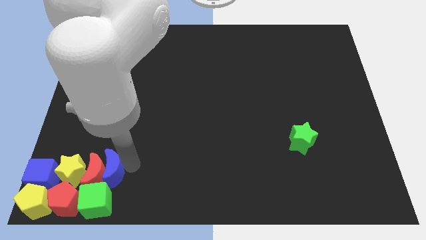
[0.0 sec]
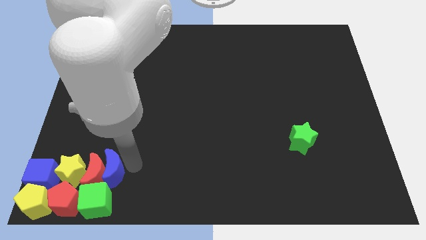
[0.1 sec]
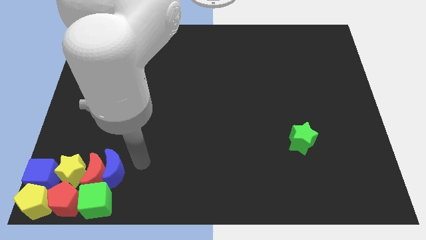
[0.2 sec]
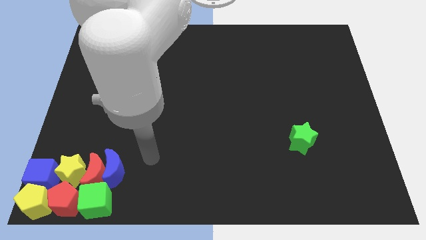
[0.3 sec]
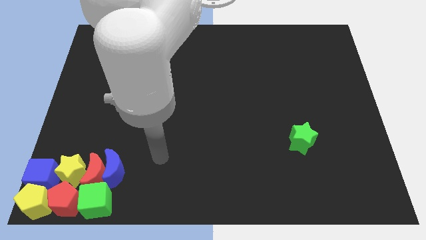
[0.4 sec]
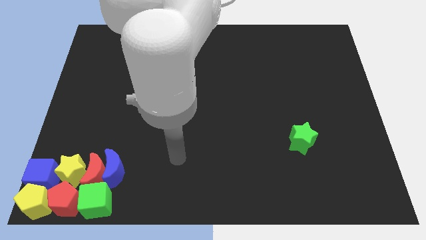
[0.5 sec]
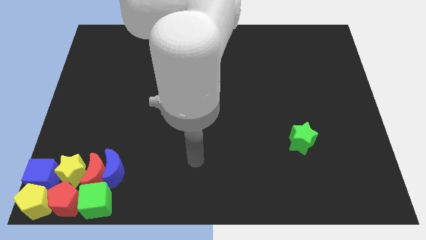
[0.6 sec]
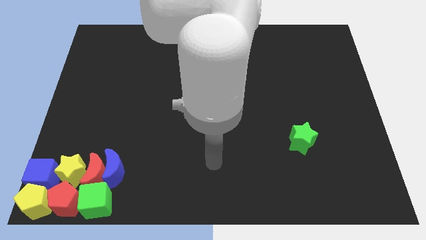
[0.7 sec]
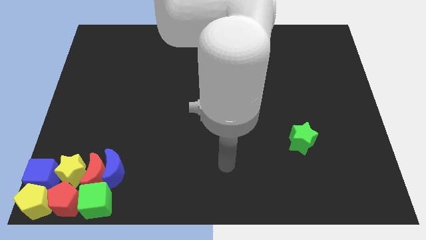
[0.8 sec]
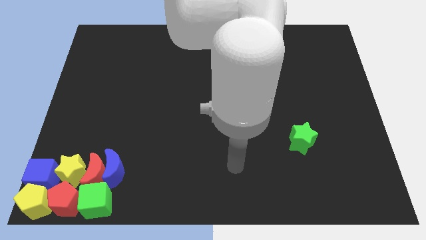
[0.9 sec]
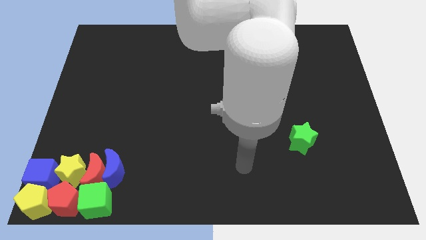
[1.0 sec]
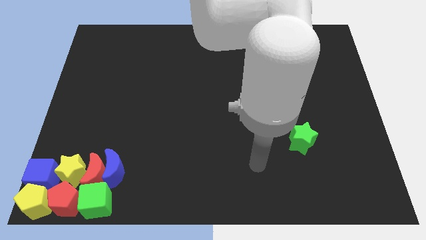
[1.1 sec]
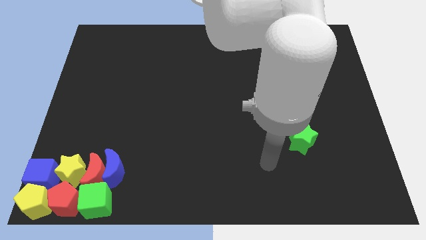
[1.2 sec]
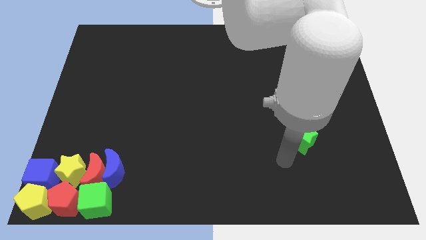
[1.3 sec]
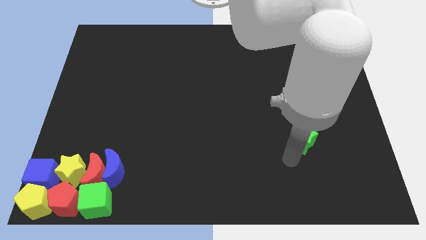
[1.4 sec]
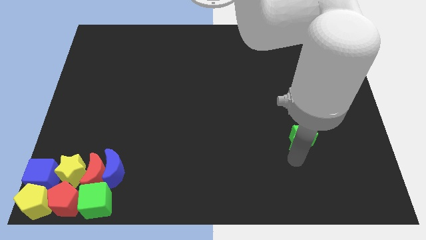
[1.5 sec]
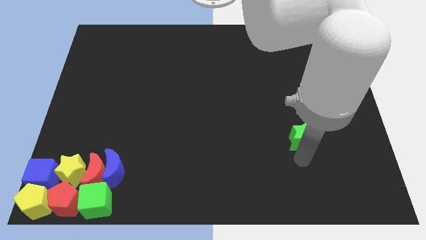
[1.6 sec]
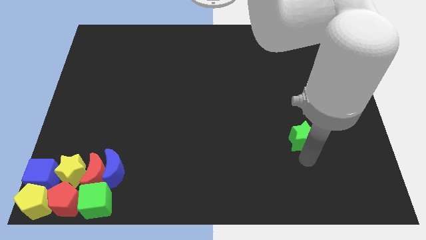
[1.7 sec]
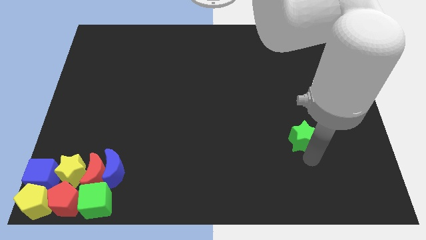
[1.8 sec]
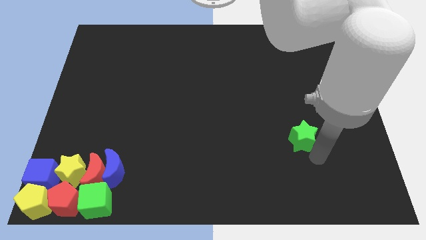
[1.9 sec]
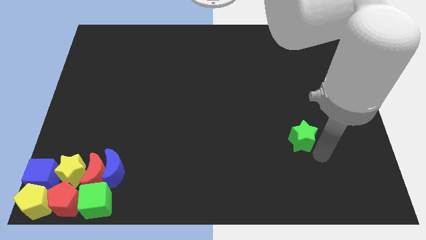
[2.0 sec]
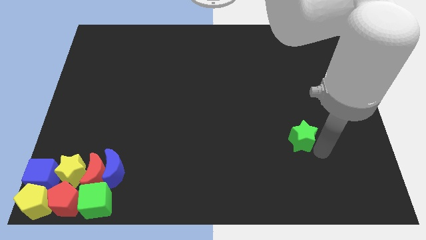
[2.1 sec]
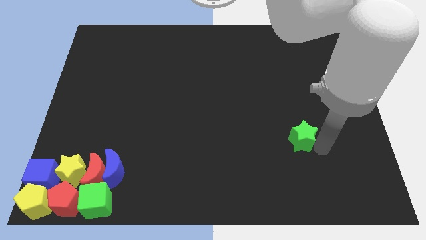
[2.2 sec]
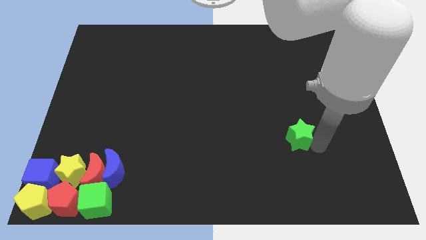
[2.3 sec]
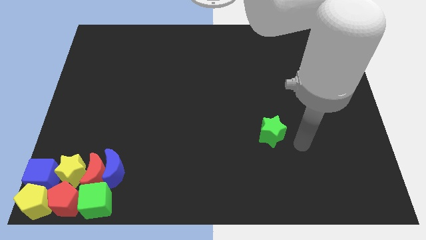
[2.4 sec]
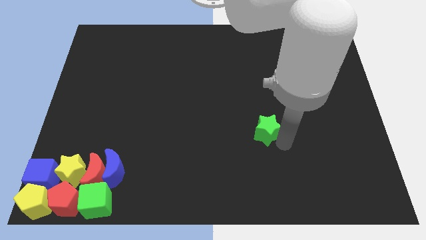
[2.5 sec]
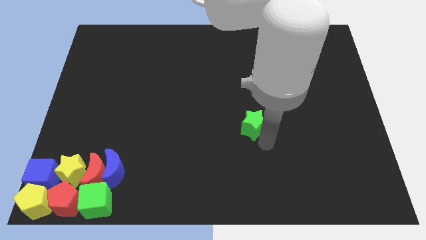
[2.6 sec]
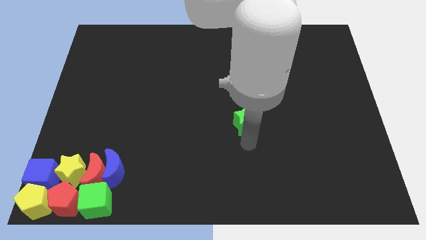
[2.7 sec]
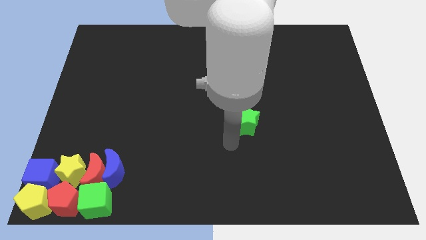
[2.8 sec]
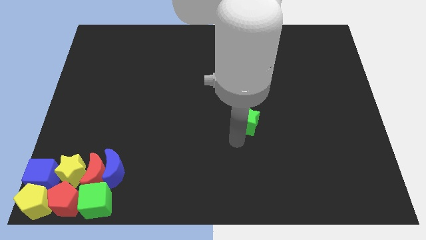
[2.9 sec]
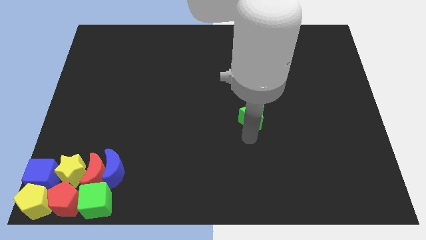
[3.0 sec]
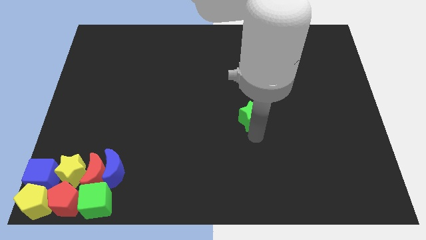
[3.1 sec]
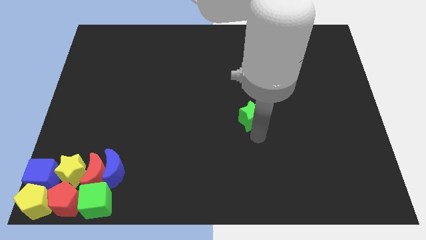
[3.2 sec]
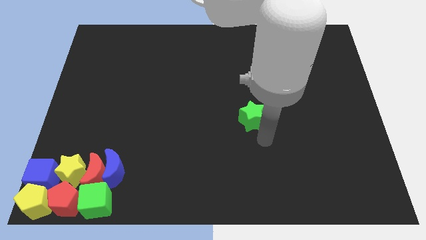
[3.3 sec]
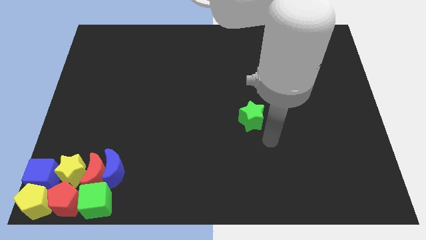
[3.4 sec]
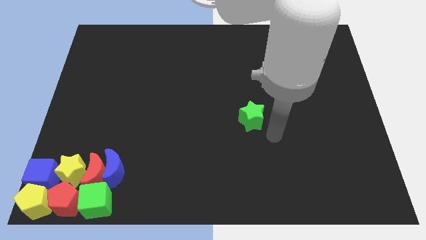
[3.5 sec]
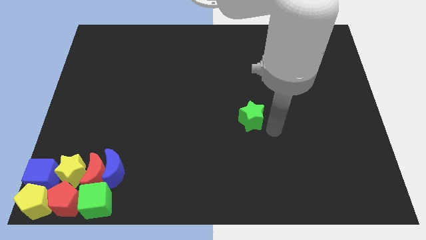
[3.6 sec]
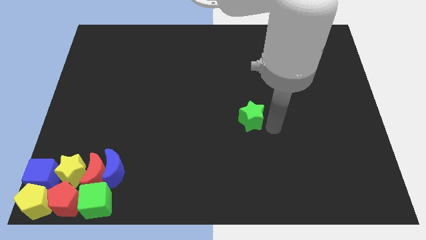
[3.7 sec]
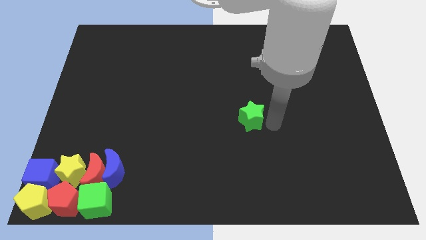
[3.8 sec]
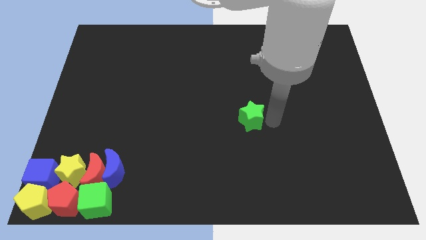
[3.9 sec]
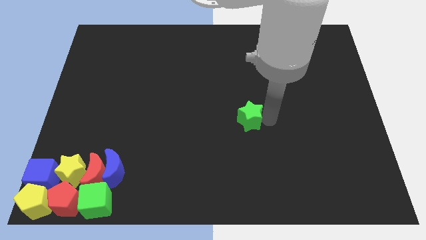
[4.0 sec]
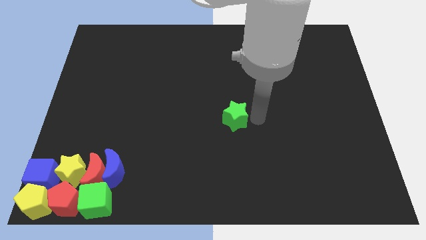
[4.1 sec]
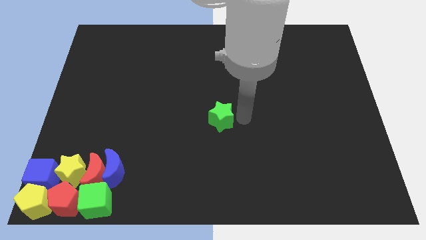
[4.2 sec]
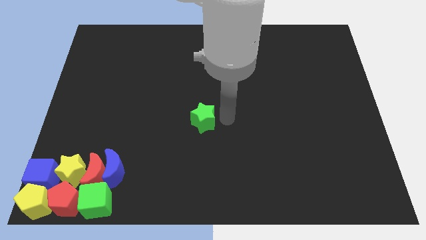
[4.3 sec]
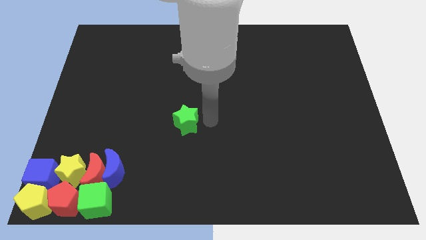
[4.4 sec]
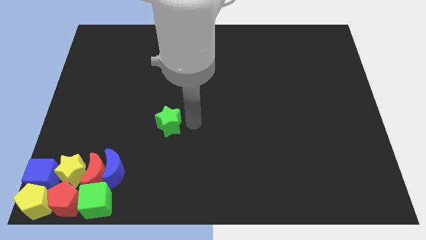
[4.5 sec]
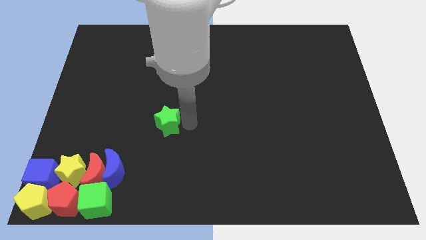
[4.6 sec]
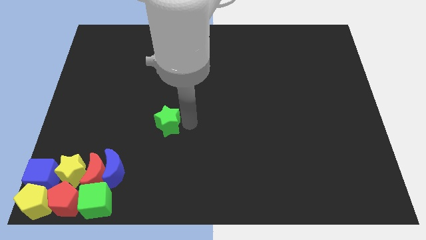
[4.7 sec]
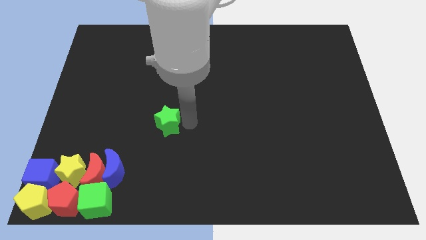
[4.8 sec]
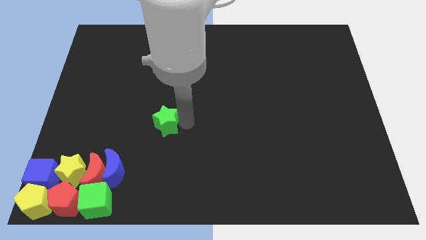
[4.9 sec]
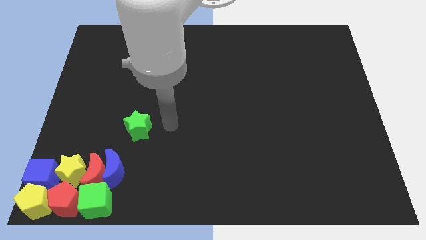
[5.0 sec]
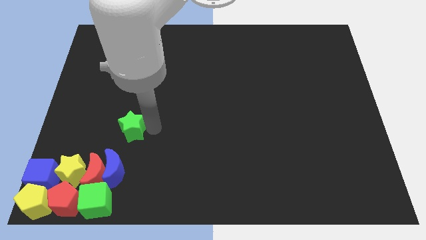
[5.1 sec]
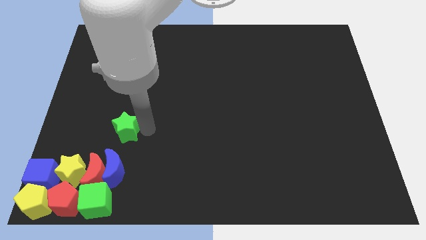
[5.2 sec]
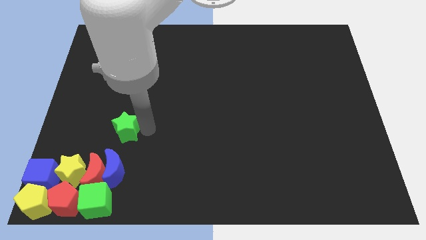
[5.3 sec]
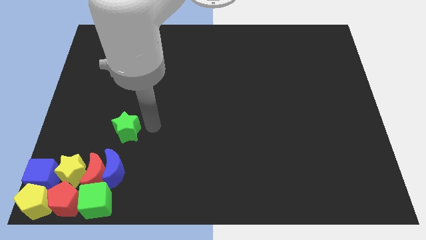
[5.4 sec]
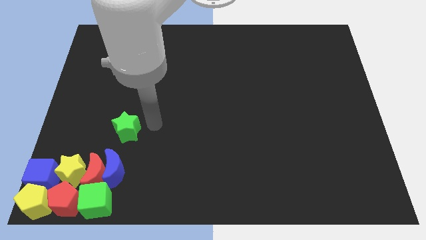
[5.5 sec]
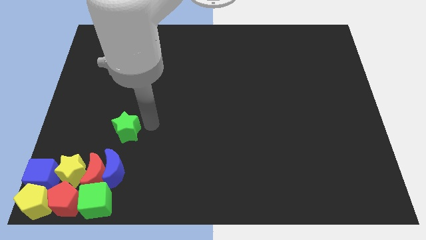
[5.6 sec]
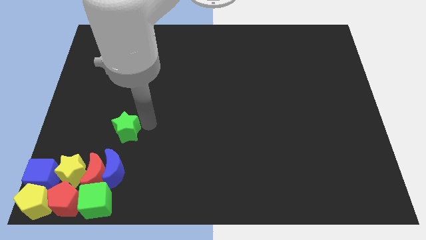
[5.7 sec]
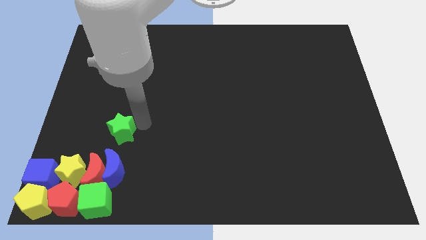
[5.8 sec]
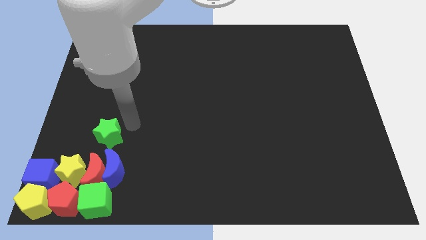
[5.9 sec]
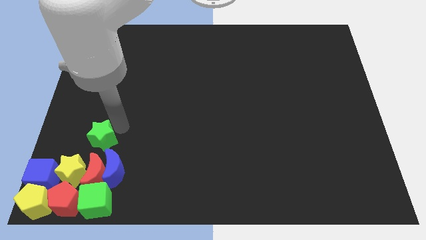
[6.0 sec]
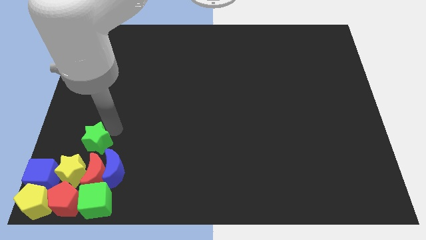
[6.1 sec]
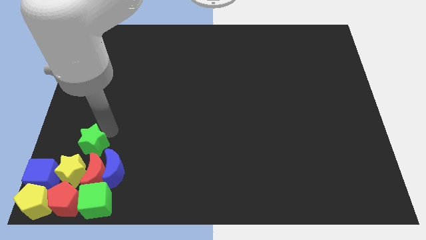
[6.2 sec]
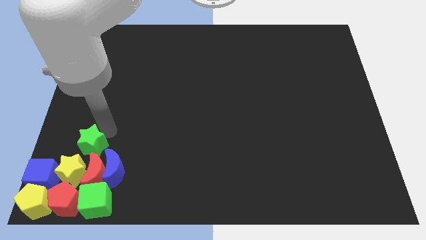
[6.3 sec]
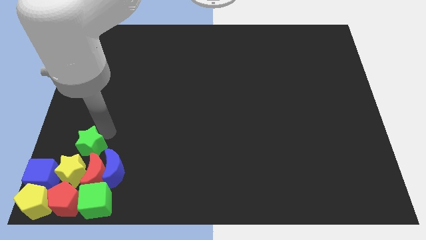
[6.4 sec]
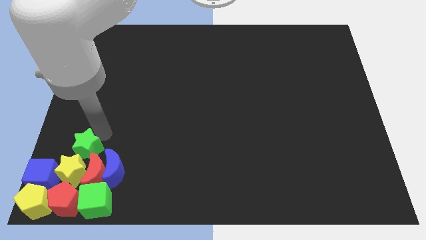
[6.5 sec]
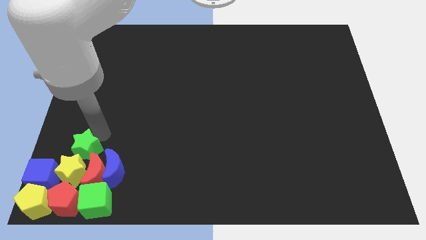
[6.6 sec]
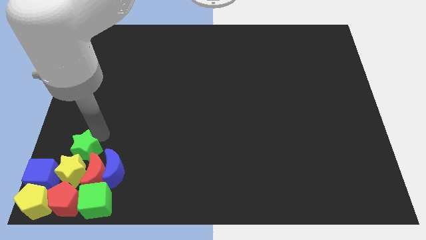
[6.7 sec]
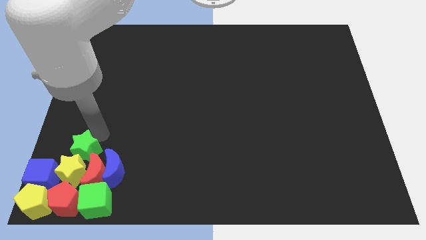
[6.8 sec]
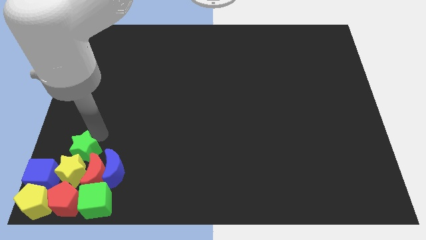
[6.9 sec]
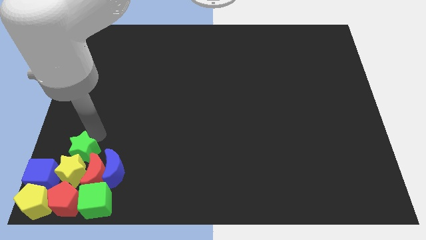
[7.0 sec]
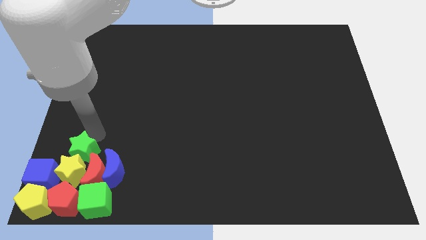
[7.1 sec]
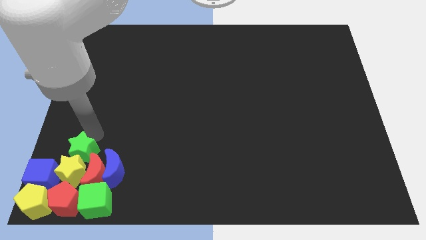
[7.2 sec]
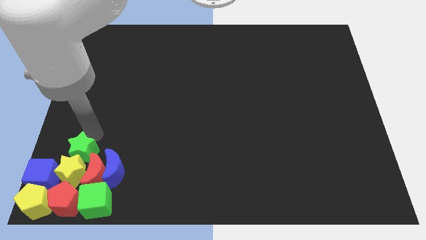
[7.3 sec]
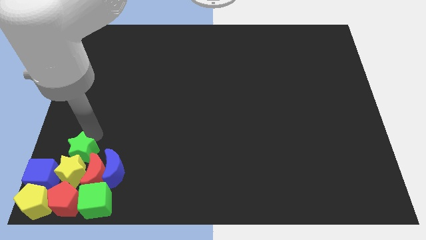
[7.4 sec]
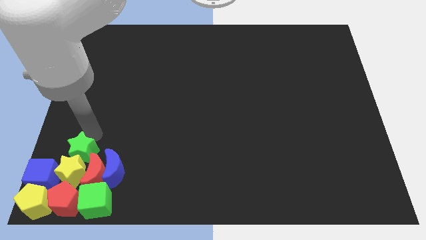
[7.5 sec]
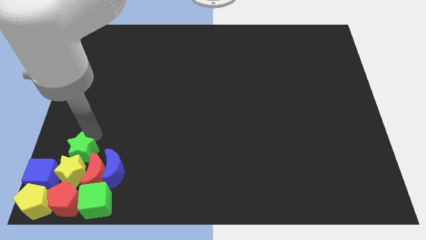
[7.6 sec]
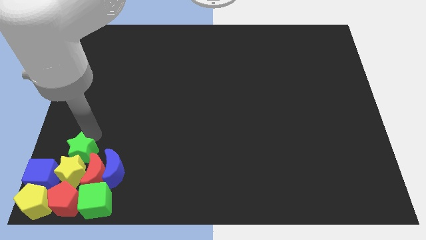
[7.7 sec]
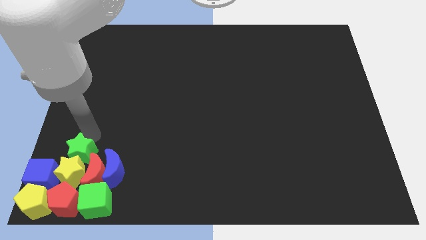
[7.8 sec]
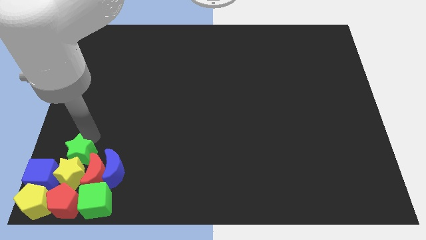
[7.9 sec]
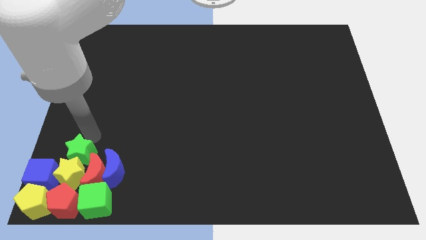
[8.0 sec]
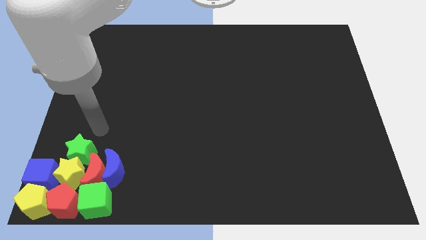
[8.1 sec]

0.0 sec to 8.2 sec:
push the green star into the yellow star

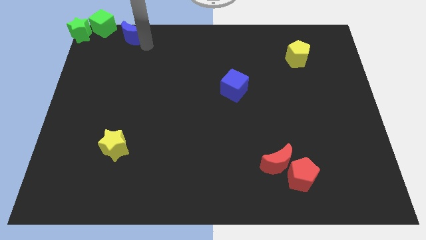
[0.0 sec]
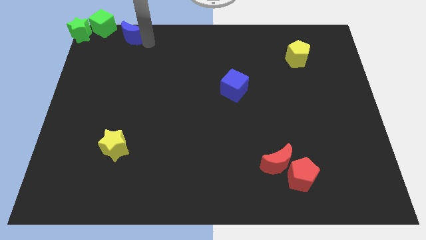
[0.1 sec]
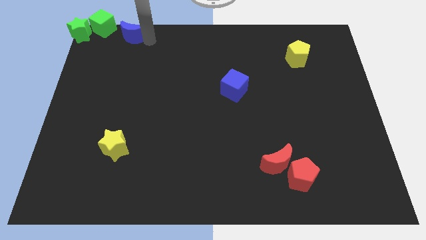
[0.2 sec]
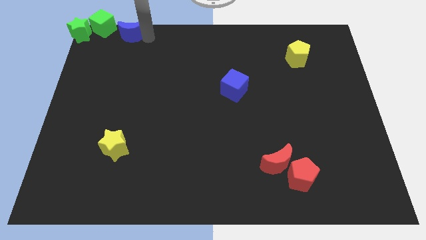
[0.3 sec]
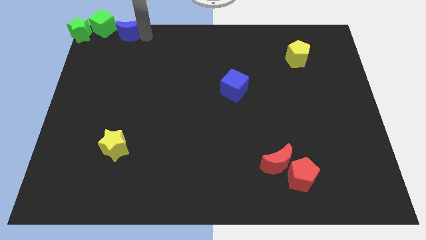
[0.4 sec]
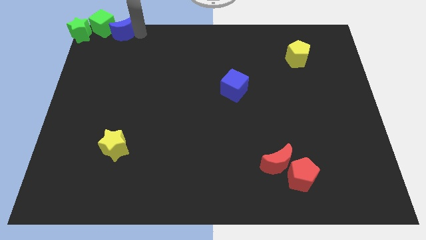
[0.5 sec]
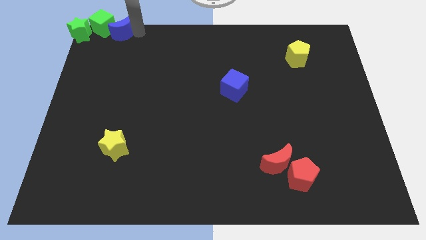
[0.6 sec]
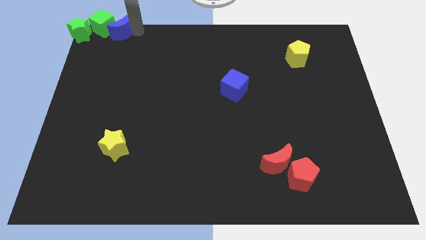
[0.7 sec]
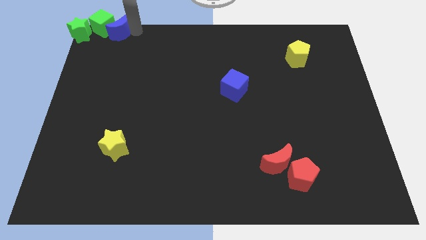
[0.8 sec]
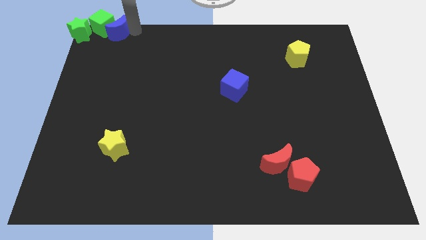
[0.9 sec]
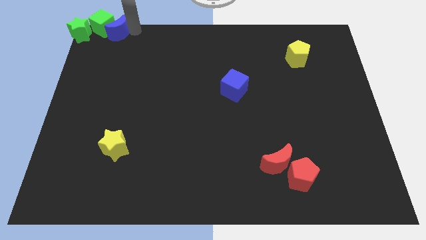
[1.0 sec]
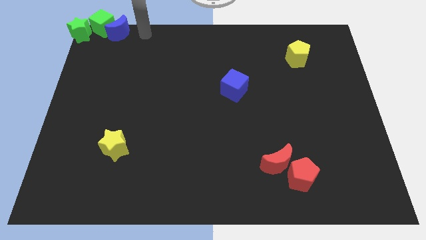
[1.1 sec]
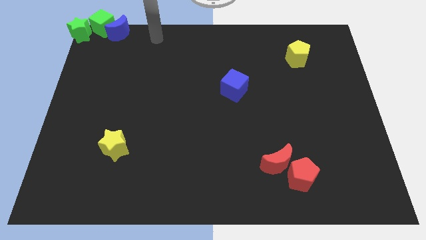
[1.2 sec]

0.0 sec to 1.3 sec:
slide the blue moon close to the green cube
